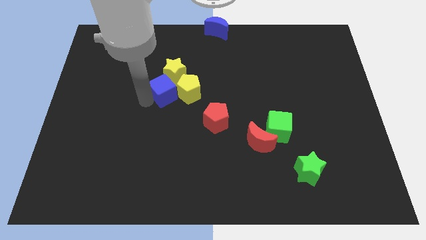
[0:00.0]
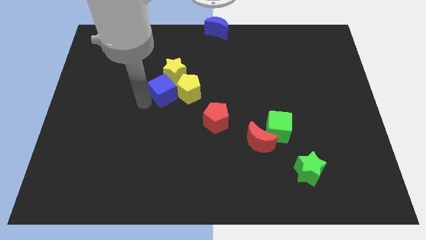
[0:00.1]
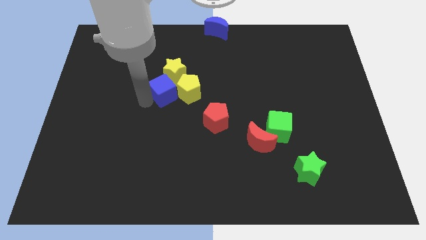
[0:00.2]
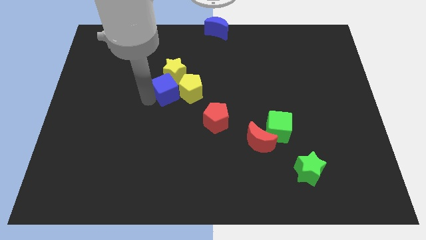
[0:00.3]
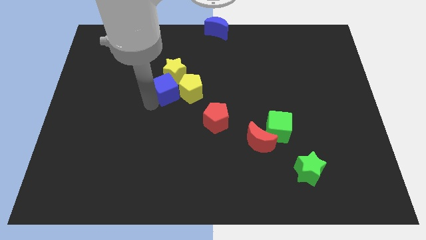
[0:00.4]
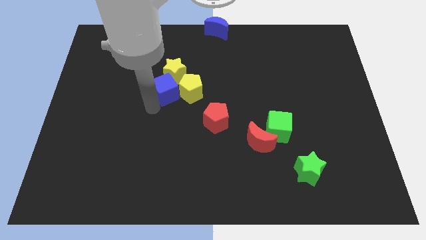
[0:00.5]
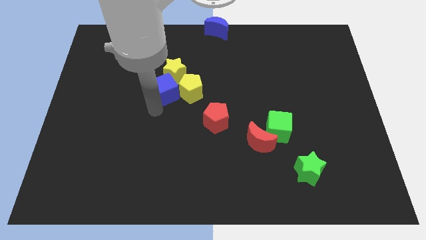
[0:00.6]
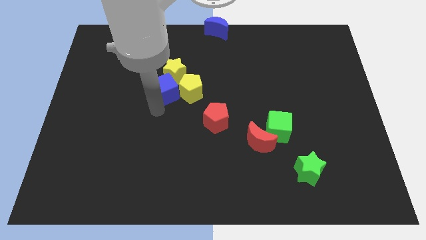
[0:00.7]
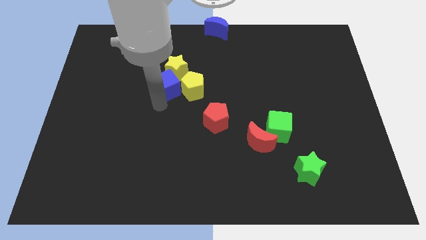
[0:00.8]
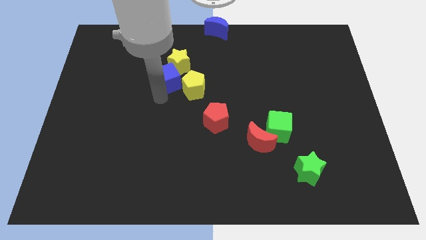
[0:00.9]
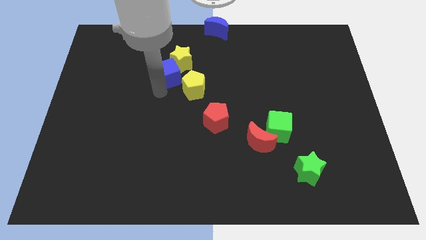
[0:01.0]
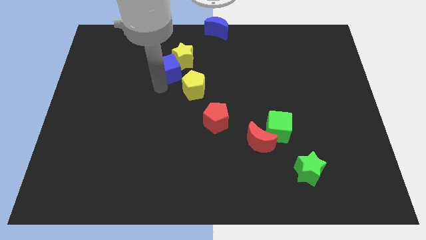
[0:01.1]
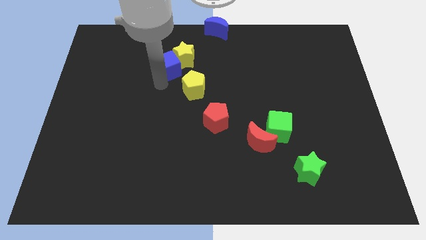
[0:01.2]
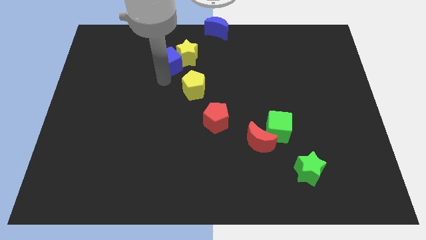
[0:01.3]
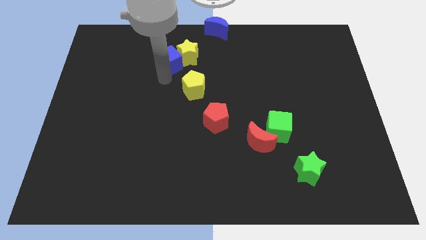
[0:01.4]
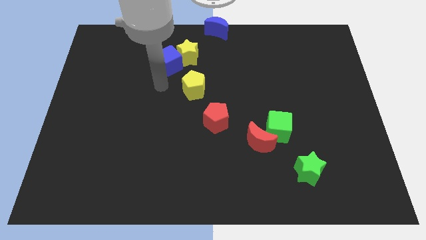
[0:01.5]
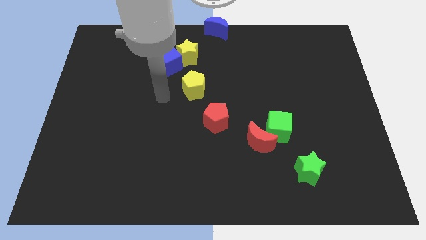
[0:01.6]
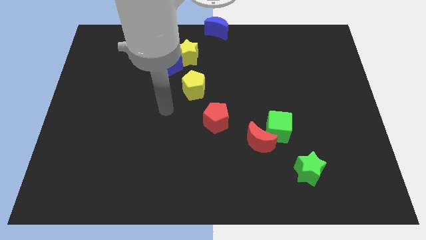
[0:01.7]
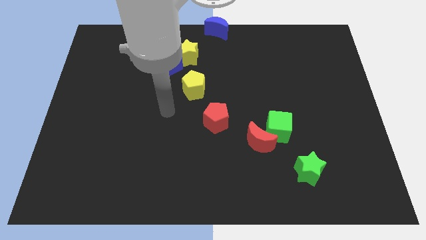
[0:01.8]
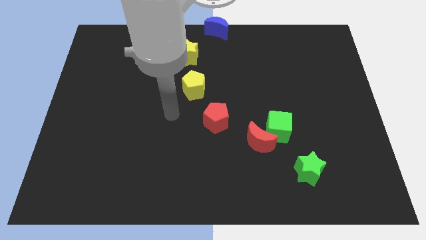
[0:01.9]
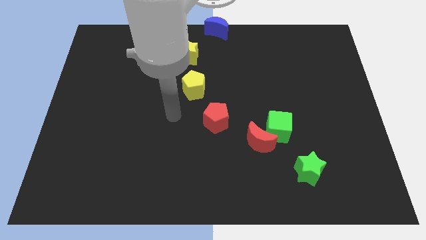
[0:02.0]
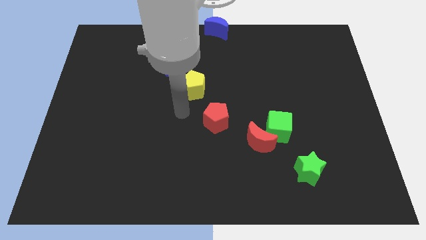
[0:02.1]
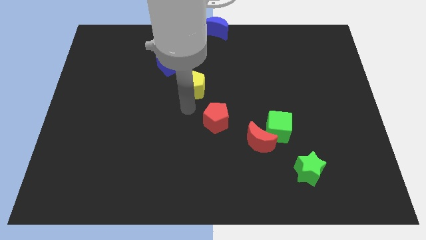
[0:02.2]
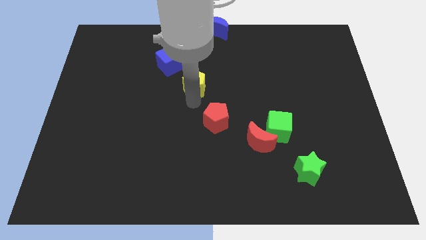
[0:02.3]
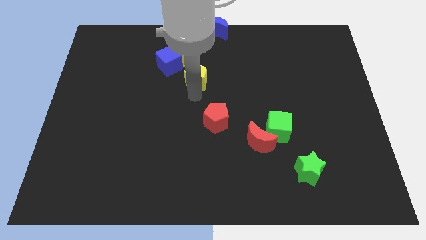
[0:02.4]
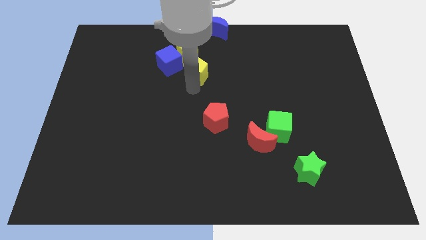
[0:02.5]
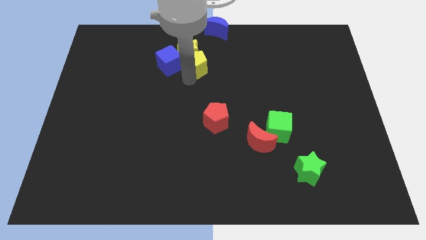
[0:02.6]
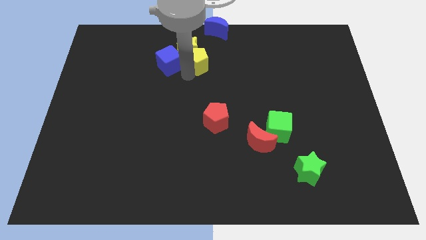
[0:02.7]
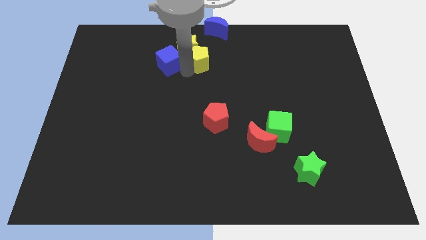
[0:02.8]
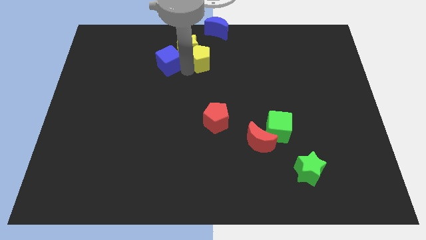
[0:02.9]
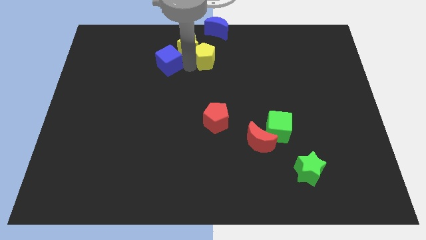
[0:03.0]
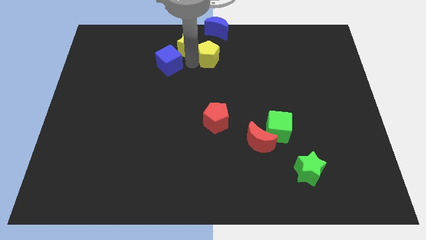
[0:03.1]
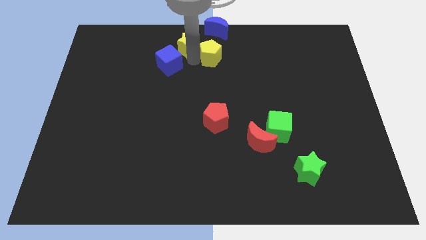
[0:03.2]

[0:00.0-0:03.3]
slide the blue cube with yellow blocks towards the top

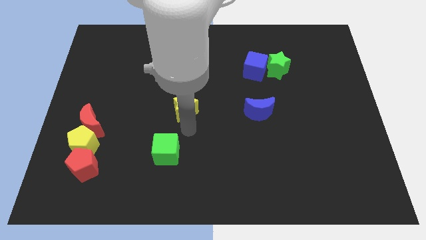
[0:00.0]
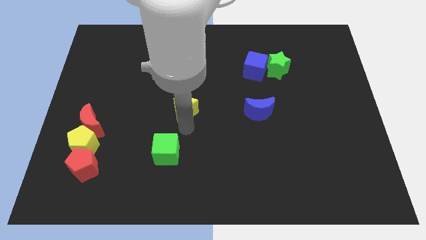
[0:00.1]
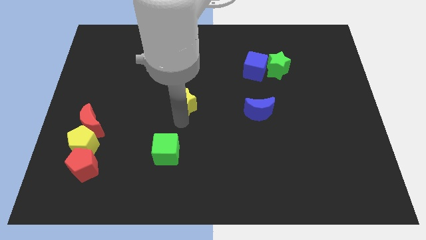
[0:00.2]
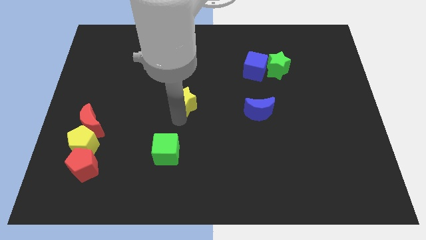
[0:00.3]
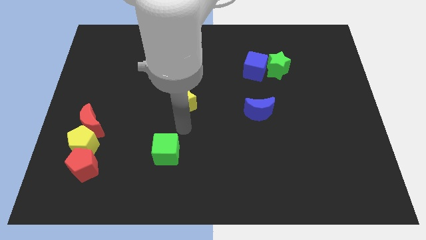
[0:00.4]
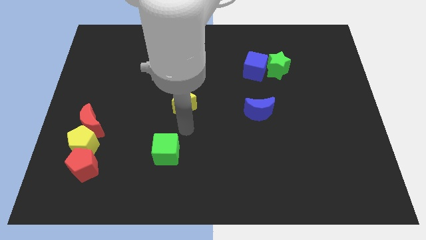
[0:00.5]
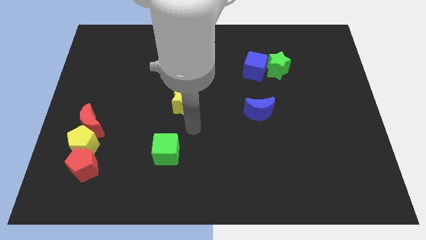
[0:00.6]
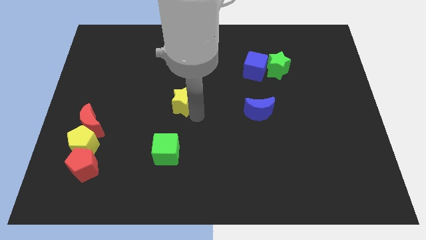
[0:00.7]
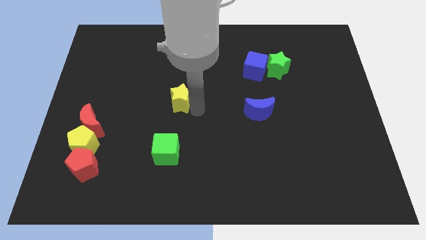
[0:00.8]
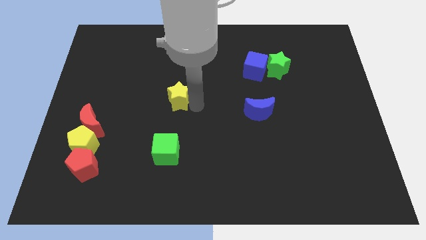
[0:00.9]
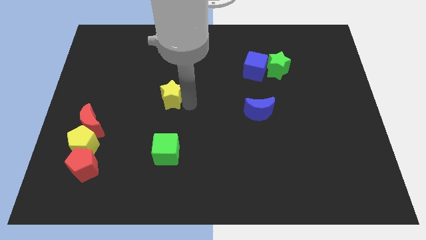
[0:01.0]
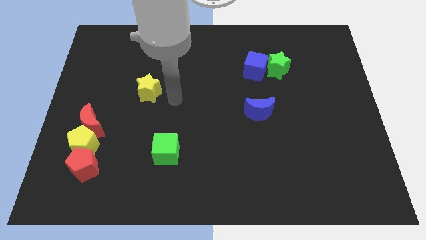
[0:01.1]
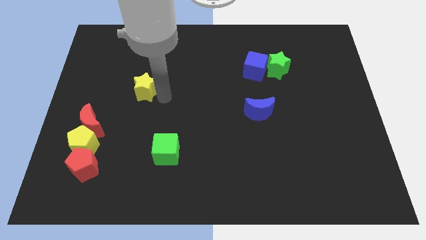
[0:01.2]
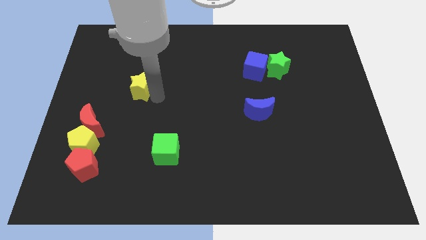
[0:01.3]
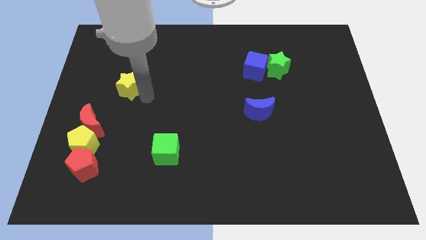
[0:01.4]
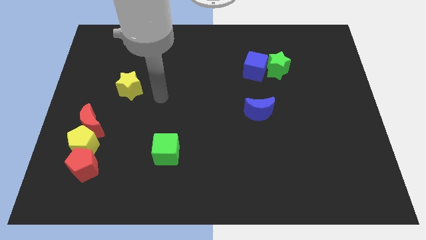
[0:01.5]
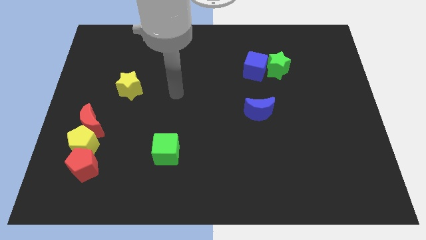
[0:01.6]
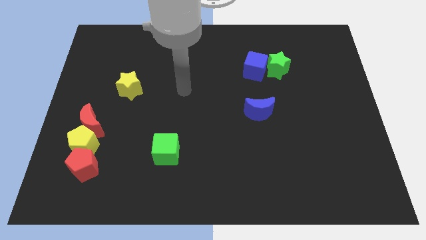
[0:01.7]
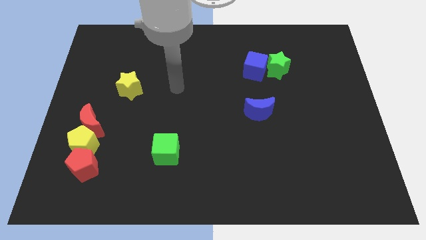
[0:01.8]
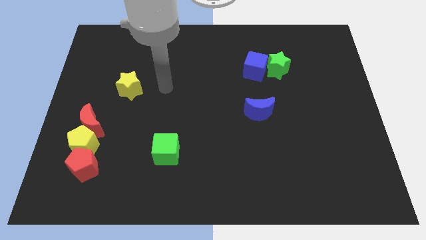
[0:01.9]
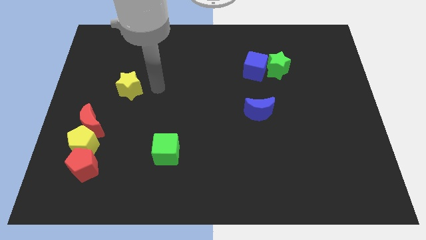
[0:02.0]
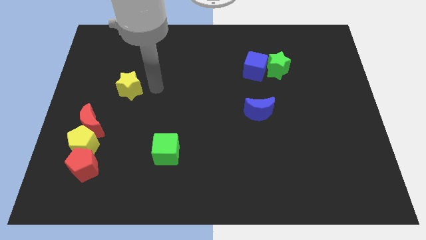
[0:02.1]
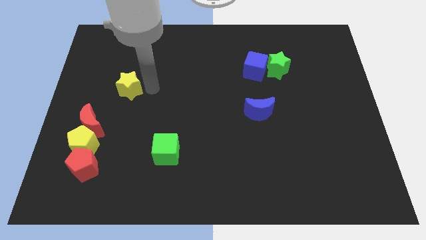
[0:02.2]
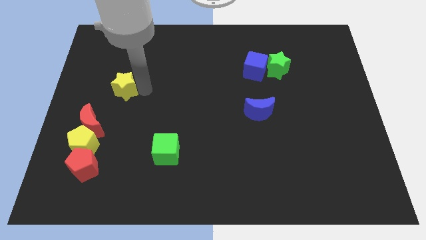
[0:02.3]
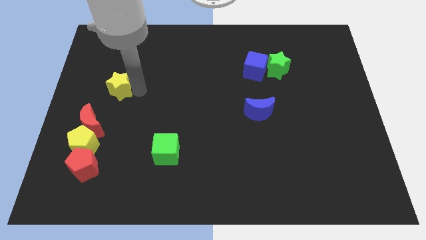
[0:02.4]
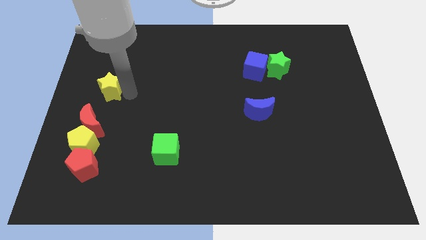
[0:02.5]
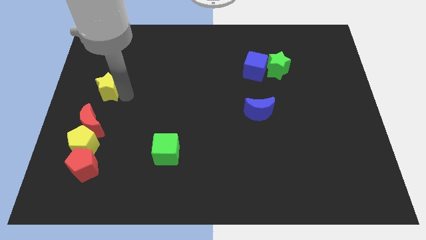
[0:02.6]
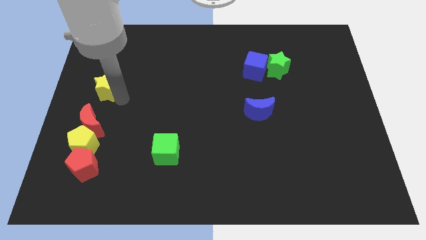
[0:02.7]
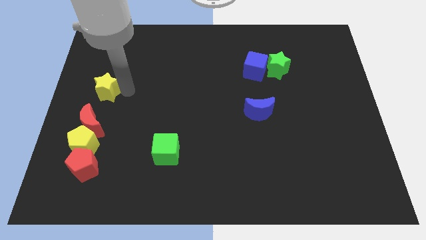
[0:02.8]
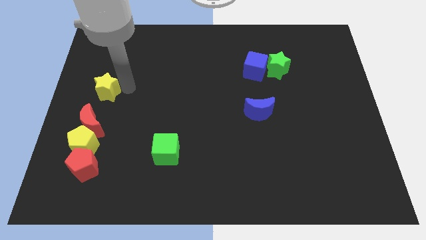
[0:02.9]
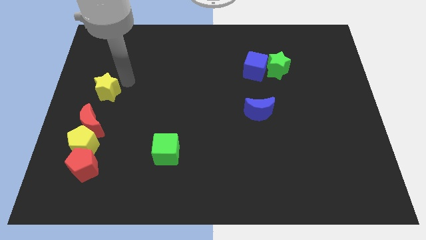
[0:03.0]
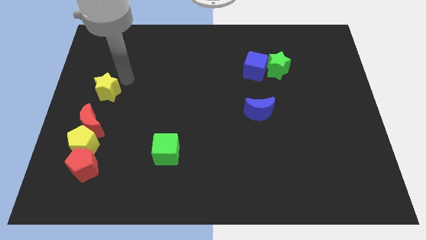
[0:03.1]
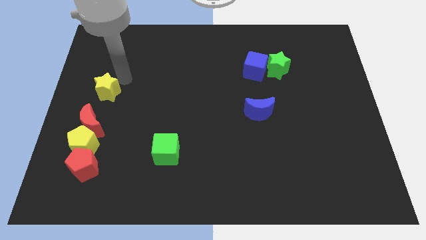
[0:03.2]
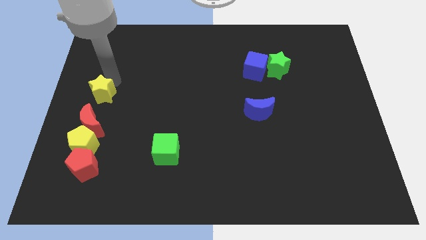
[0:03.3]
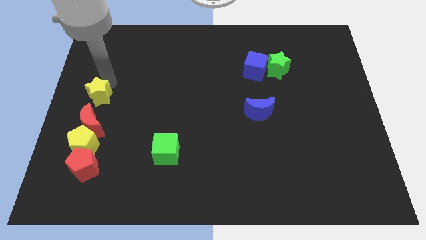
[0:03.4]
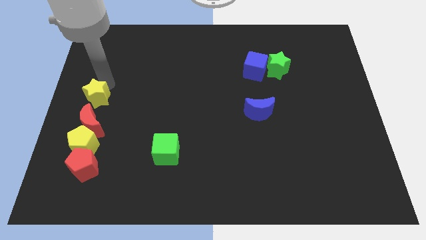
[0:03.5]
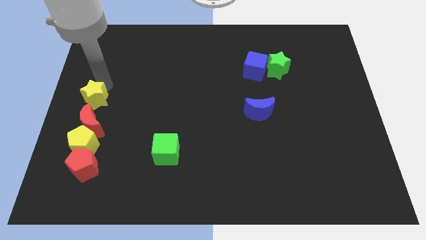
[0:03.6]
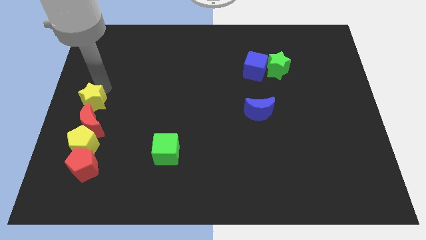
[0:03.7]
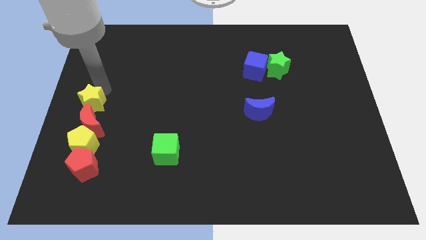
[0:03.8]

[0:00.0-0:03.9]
place yellow star above red moon

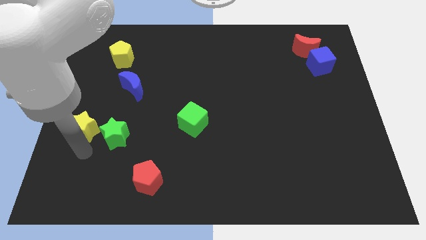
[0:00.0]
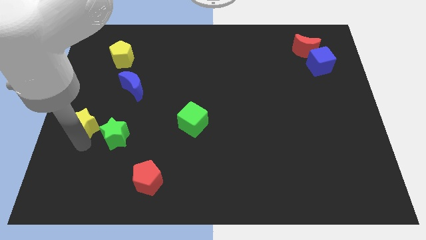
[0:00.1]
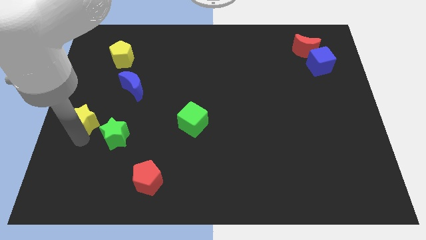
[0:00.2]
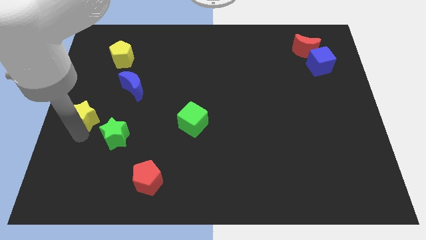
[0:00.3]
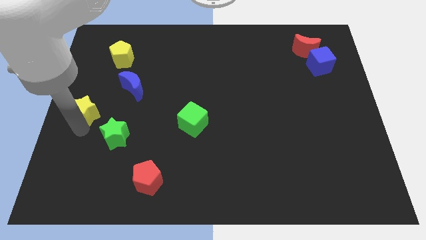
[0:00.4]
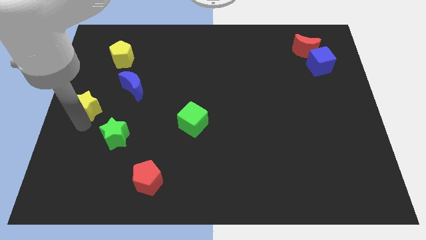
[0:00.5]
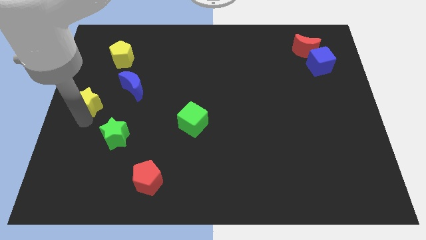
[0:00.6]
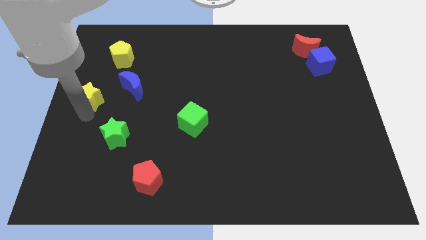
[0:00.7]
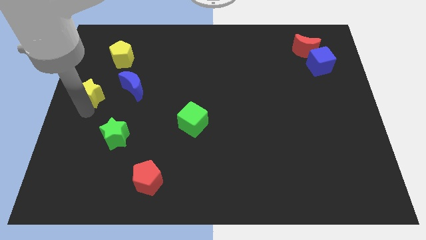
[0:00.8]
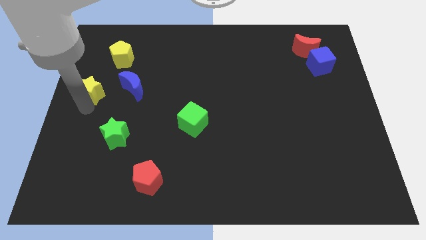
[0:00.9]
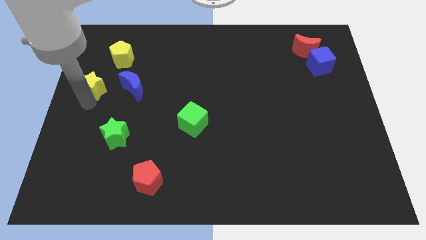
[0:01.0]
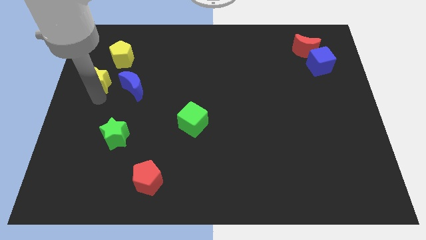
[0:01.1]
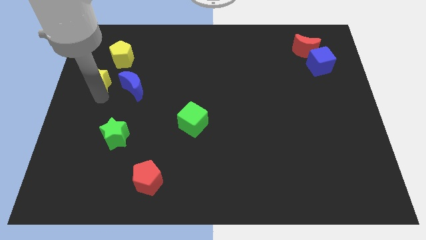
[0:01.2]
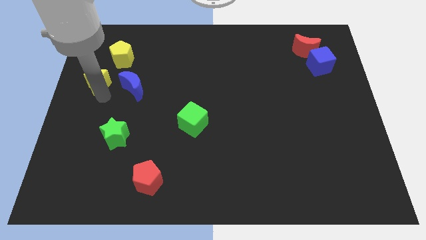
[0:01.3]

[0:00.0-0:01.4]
separate yellow star from green star

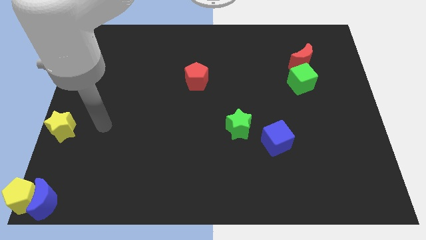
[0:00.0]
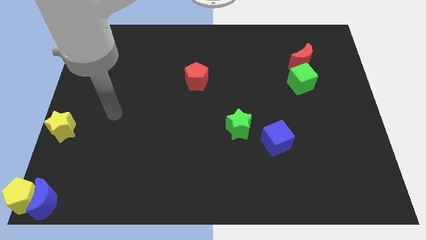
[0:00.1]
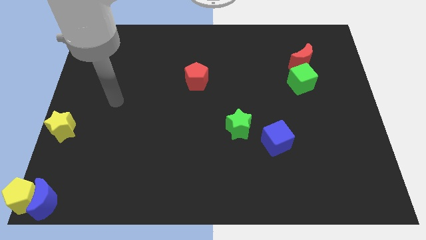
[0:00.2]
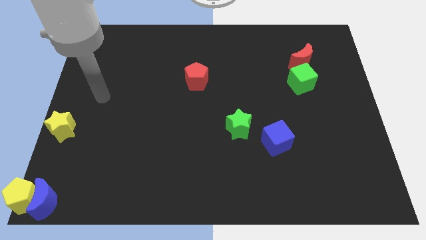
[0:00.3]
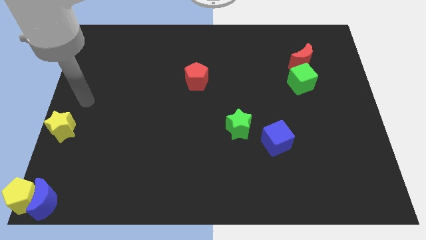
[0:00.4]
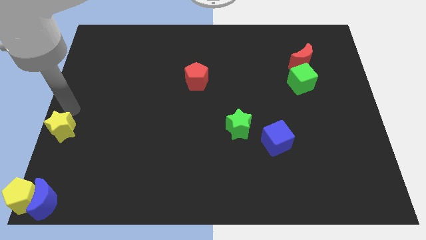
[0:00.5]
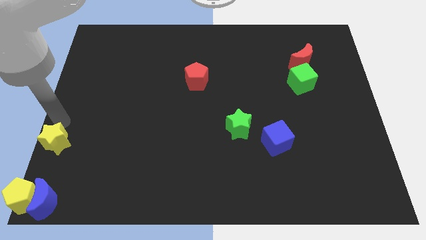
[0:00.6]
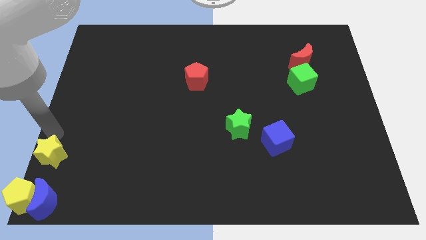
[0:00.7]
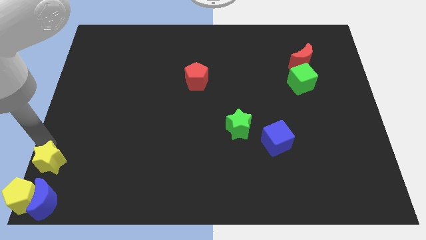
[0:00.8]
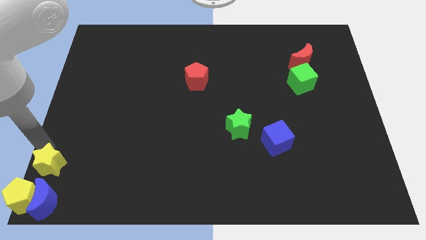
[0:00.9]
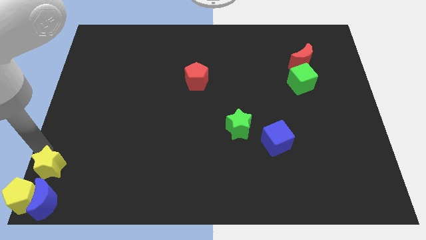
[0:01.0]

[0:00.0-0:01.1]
slide yellow star on top of blue moon
